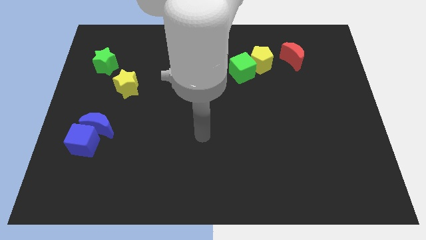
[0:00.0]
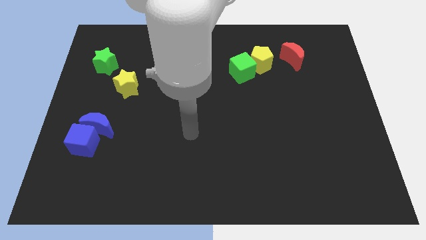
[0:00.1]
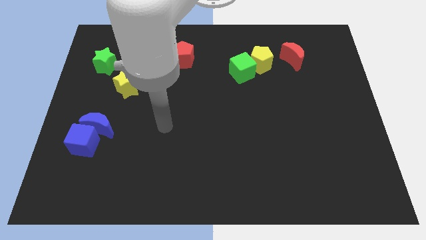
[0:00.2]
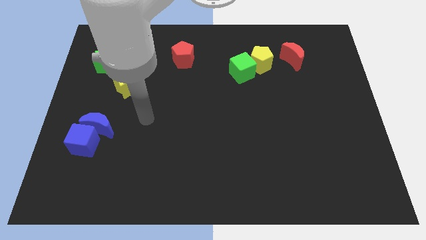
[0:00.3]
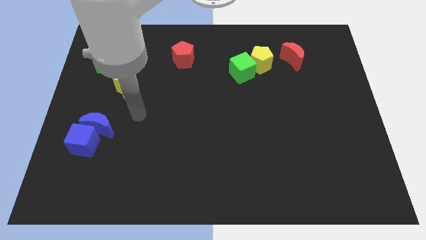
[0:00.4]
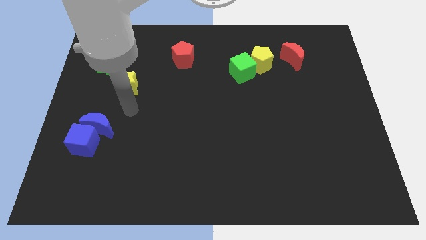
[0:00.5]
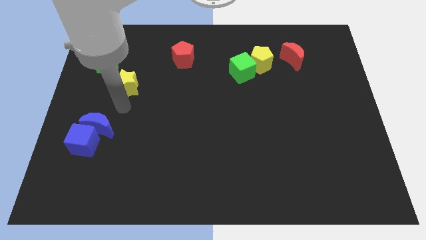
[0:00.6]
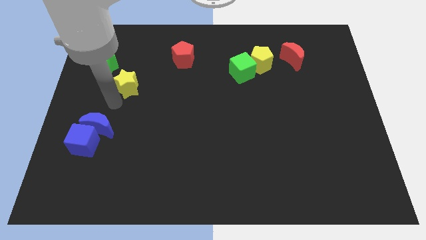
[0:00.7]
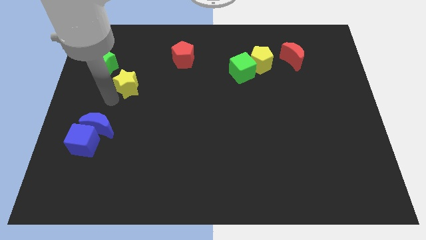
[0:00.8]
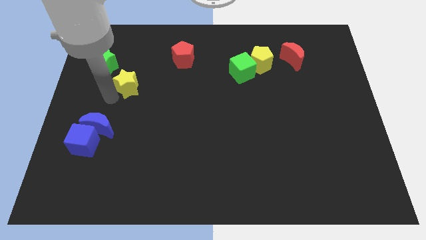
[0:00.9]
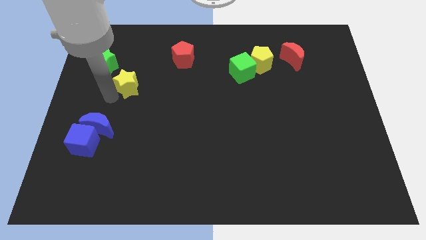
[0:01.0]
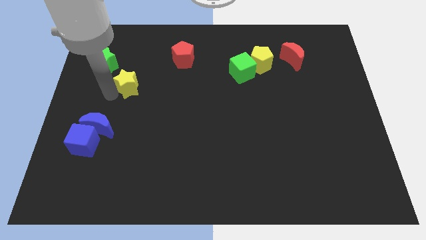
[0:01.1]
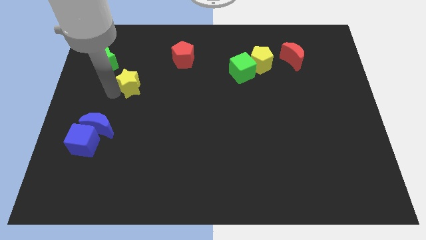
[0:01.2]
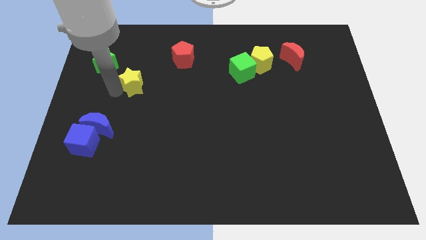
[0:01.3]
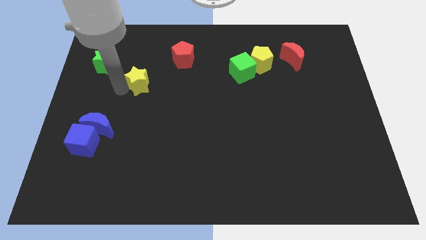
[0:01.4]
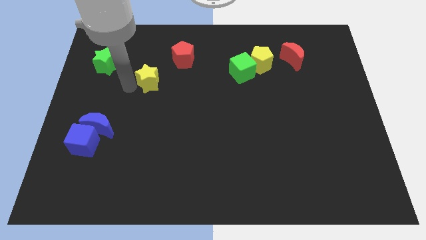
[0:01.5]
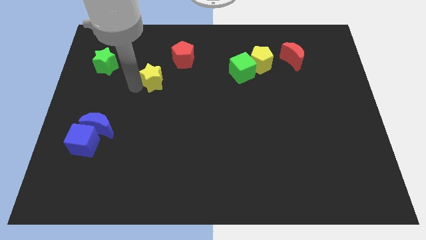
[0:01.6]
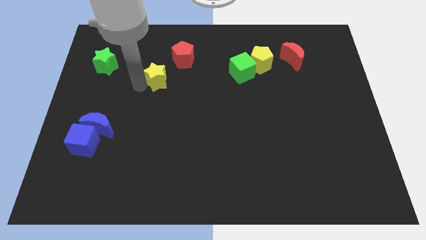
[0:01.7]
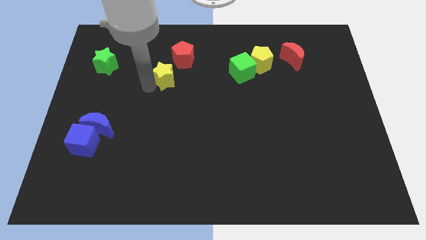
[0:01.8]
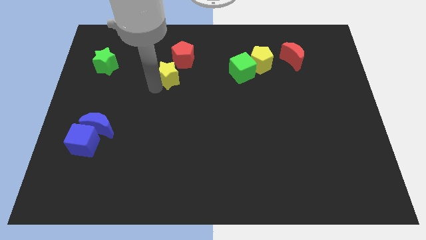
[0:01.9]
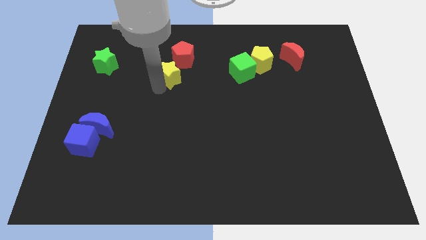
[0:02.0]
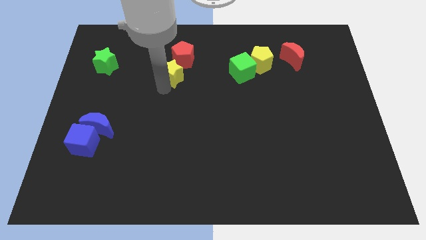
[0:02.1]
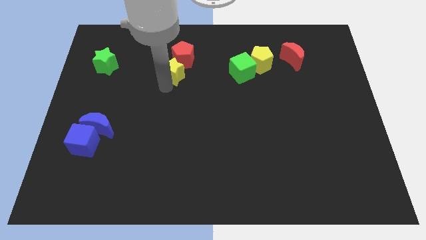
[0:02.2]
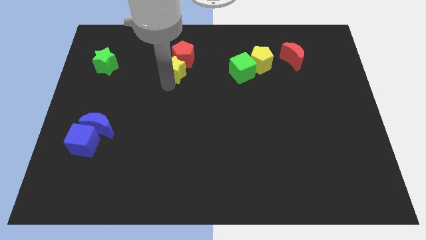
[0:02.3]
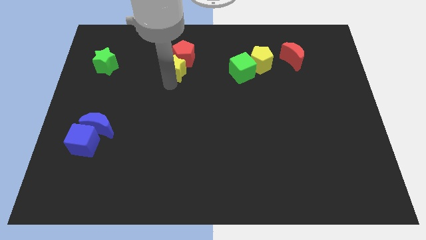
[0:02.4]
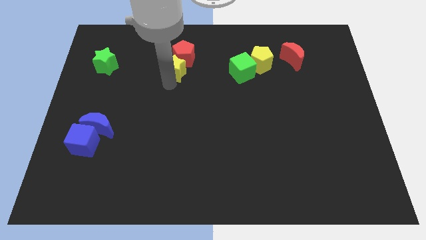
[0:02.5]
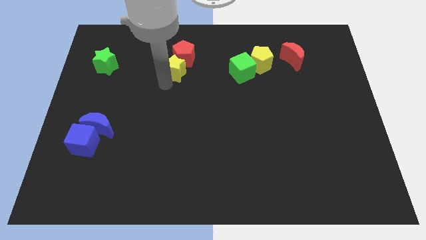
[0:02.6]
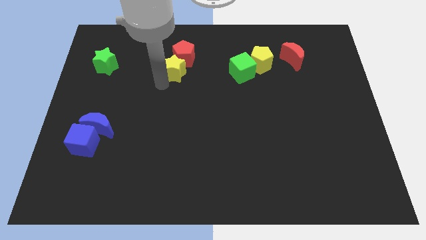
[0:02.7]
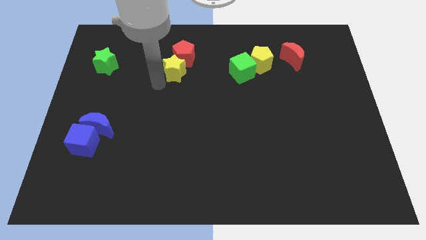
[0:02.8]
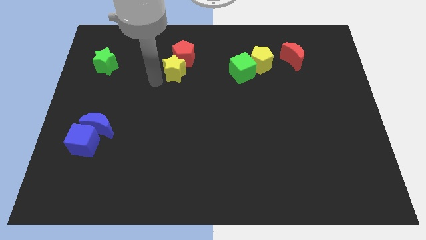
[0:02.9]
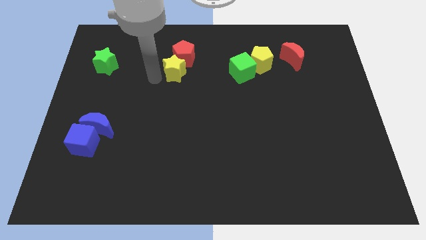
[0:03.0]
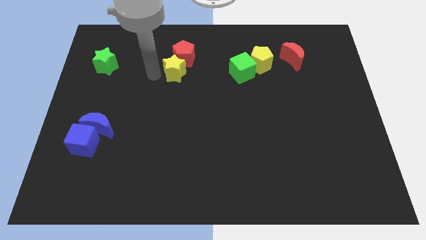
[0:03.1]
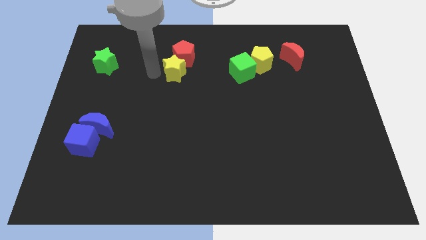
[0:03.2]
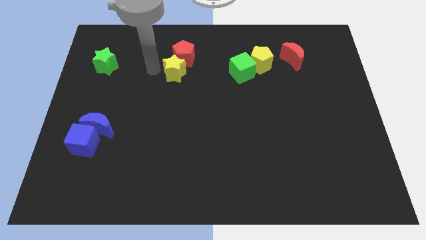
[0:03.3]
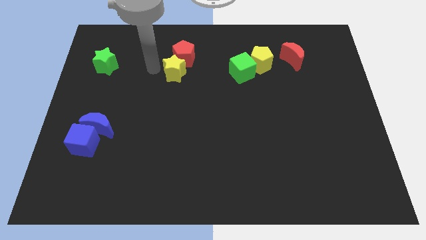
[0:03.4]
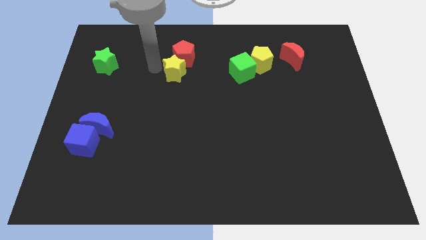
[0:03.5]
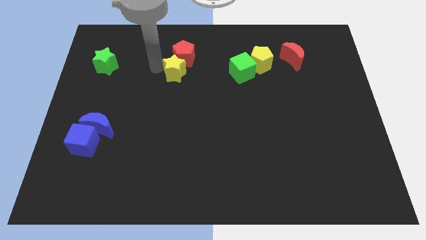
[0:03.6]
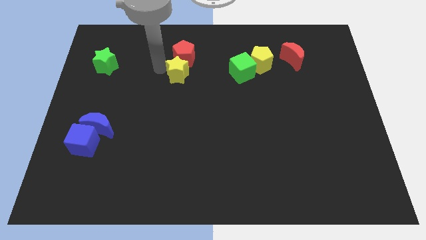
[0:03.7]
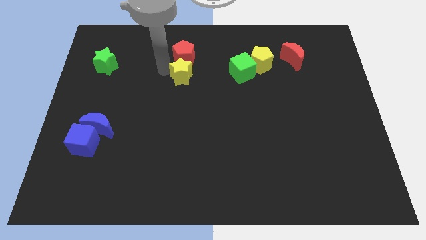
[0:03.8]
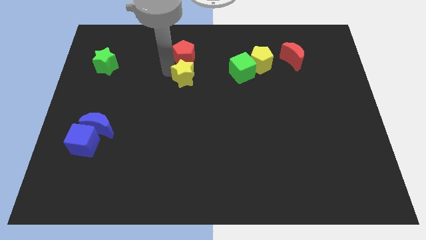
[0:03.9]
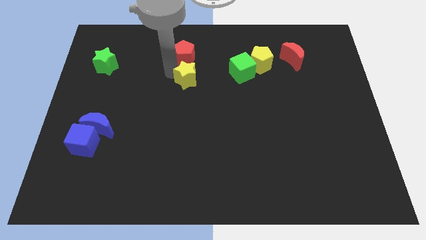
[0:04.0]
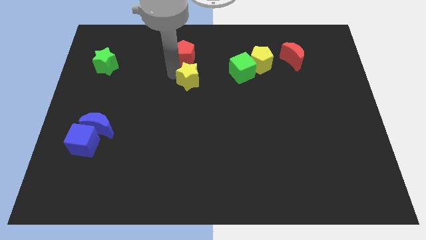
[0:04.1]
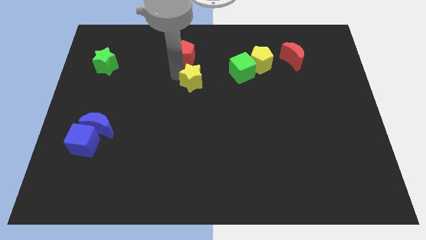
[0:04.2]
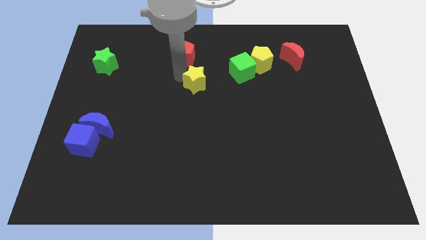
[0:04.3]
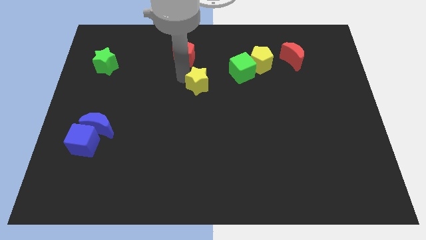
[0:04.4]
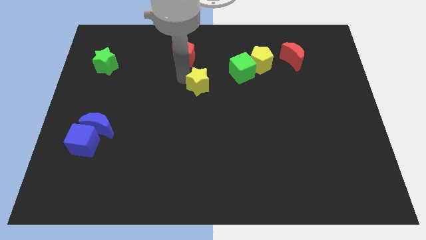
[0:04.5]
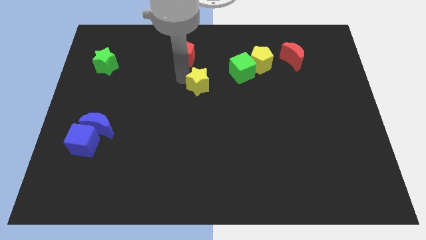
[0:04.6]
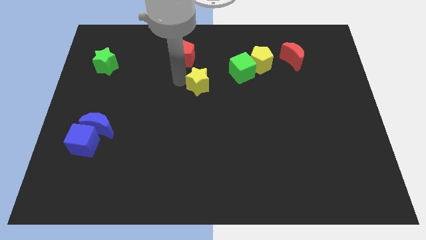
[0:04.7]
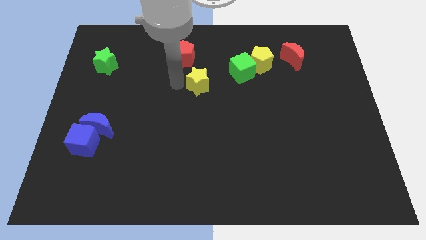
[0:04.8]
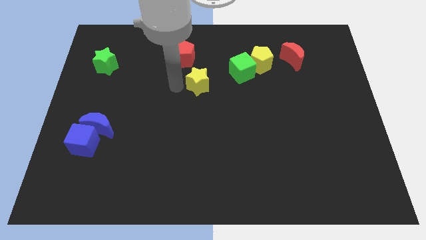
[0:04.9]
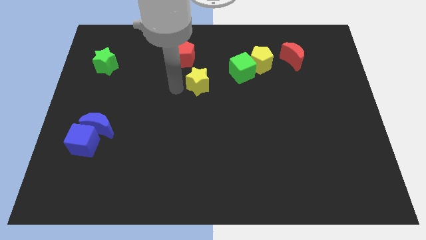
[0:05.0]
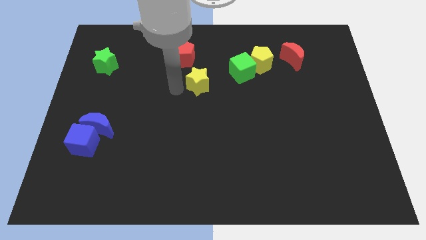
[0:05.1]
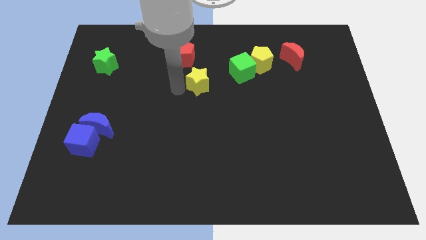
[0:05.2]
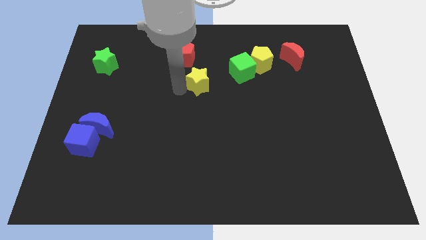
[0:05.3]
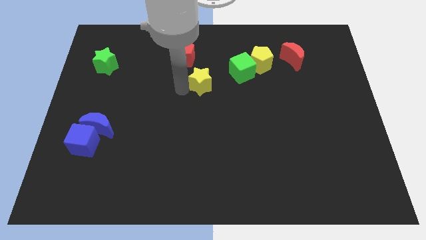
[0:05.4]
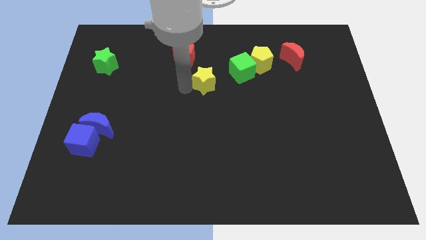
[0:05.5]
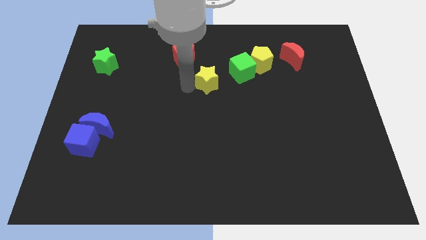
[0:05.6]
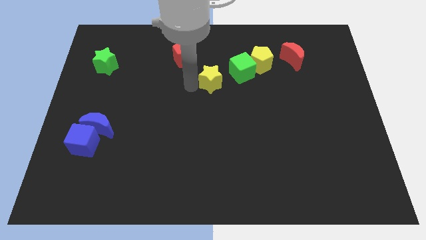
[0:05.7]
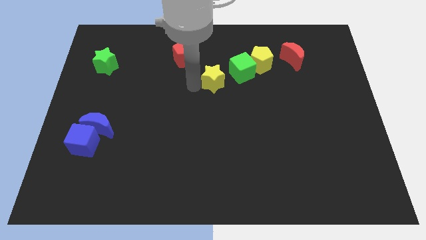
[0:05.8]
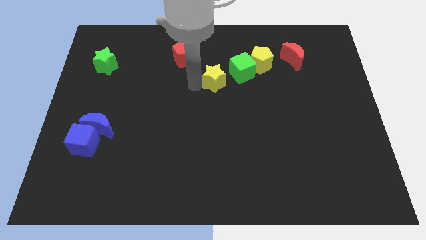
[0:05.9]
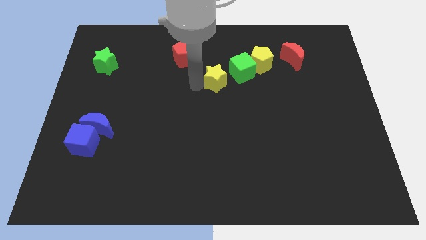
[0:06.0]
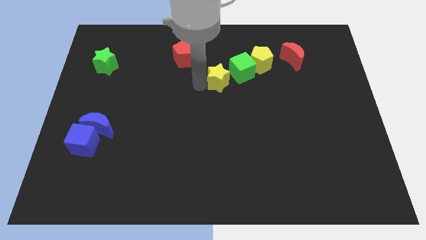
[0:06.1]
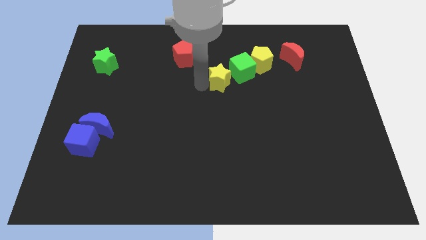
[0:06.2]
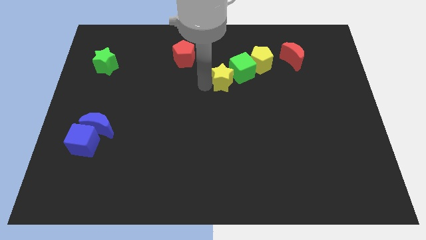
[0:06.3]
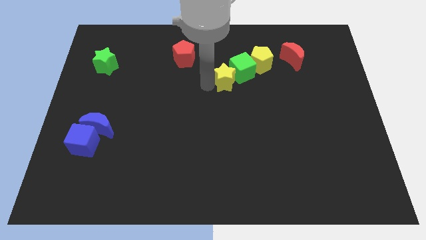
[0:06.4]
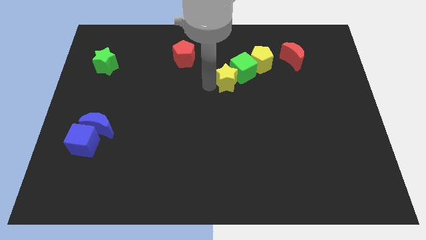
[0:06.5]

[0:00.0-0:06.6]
push the yellow star next to the green cube

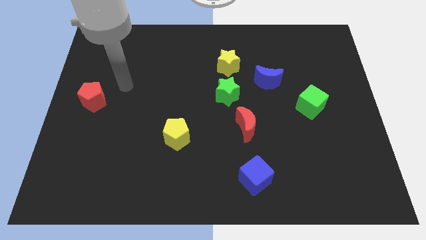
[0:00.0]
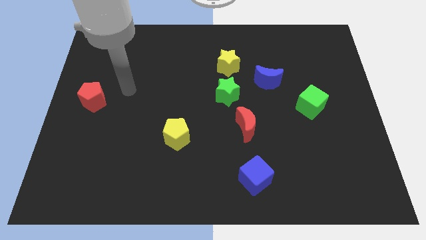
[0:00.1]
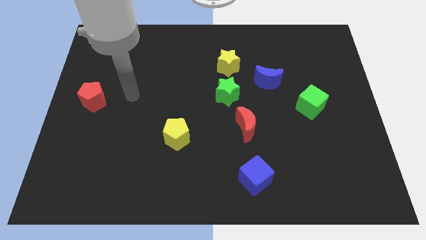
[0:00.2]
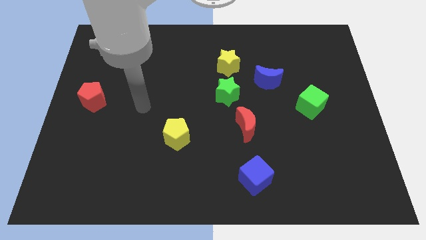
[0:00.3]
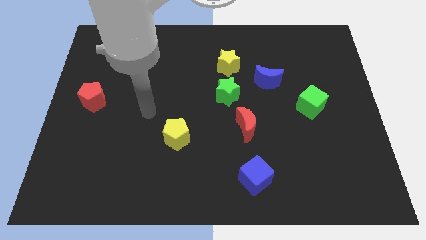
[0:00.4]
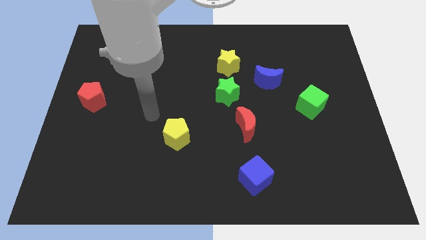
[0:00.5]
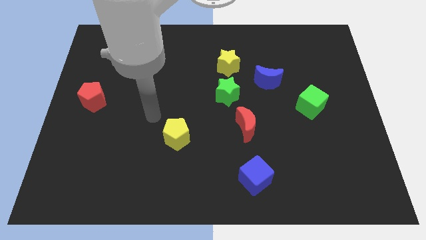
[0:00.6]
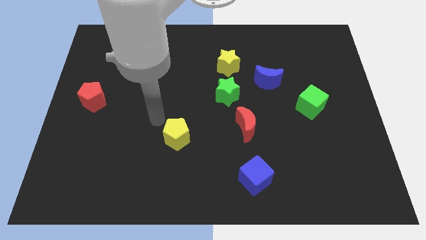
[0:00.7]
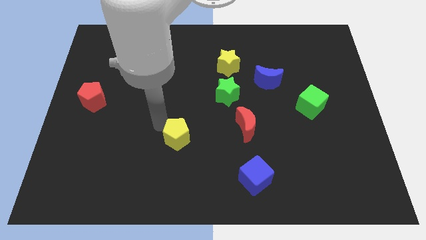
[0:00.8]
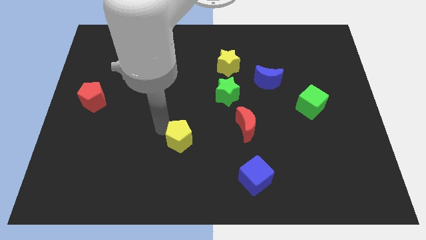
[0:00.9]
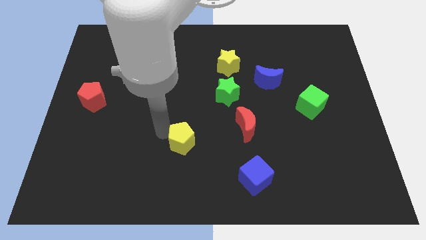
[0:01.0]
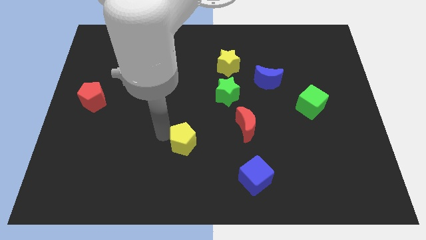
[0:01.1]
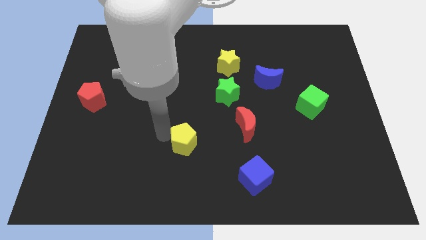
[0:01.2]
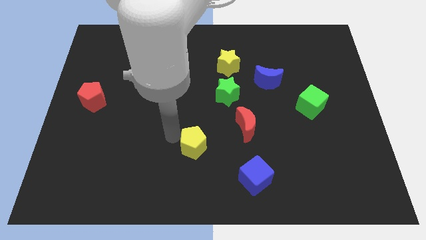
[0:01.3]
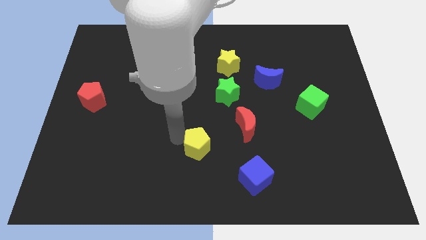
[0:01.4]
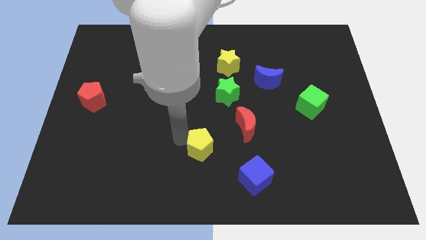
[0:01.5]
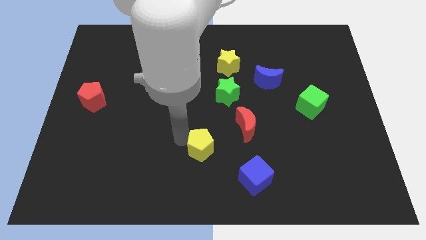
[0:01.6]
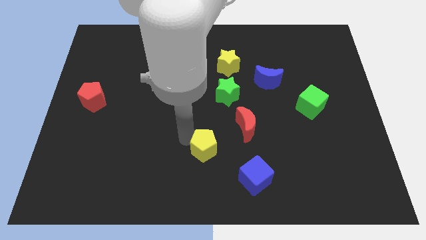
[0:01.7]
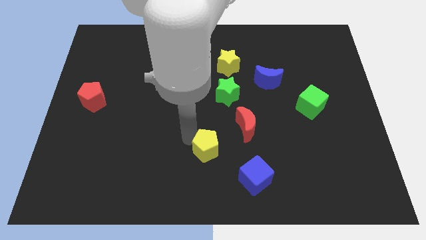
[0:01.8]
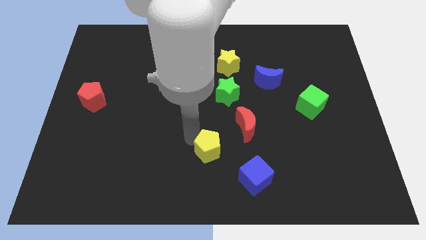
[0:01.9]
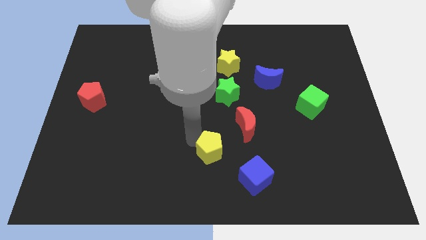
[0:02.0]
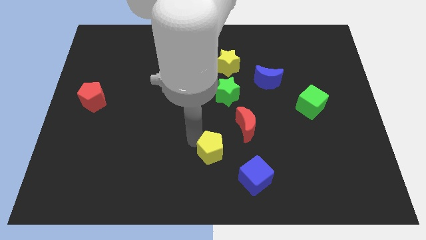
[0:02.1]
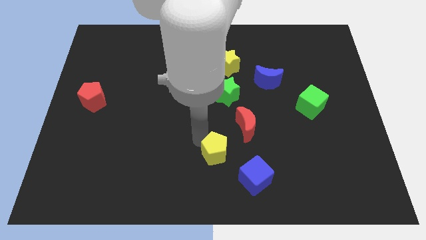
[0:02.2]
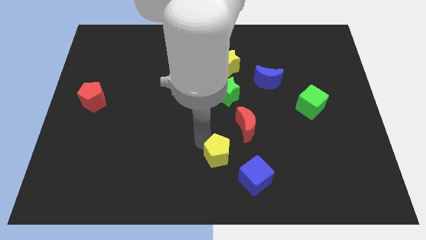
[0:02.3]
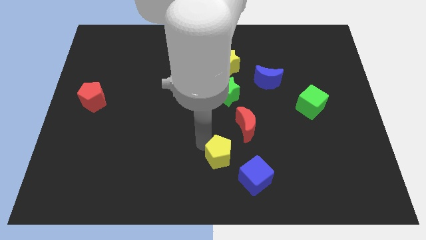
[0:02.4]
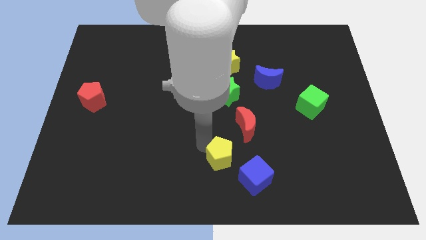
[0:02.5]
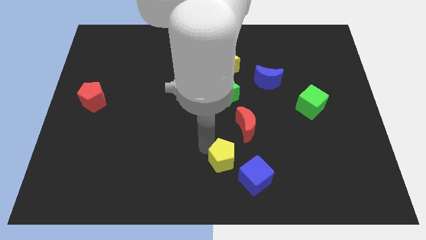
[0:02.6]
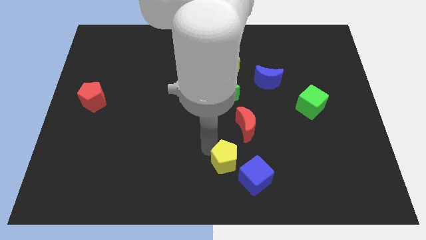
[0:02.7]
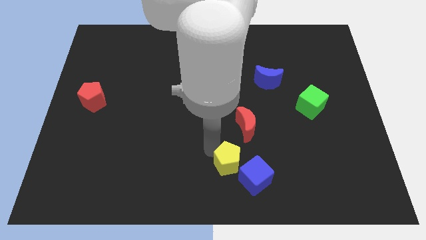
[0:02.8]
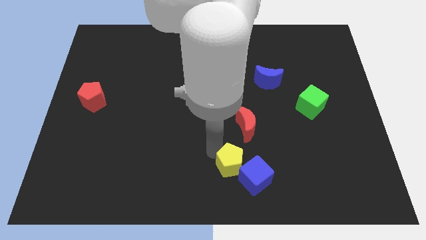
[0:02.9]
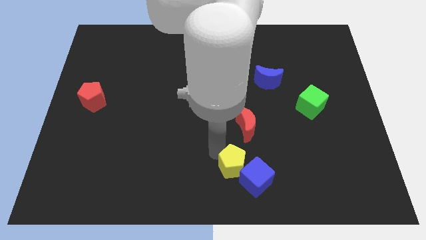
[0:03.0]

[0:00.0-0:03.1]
push the yellow pentagon to the blue cube
